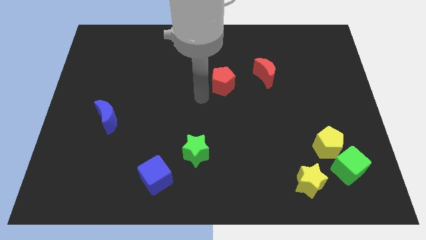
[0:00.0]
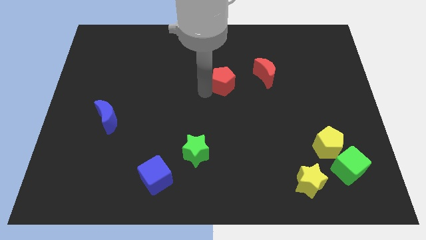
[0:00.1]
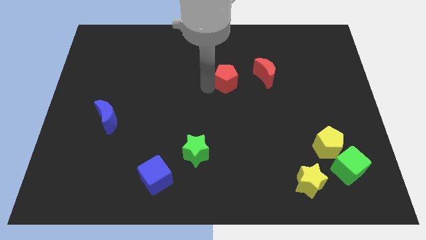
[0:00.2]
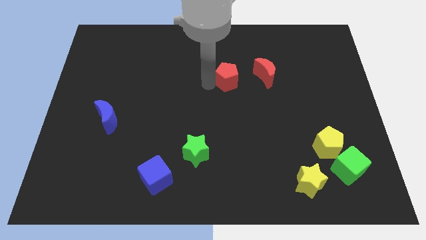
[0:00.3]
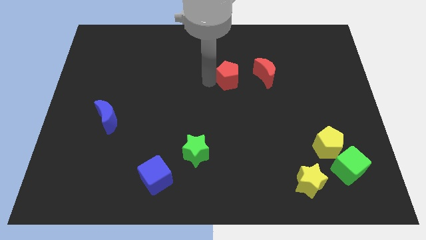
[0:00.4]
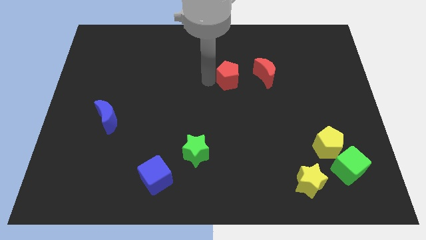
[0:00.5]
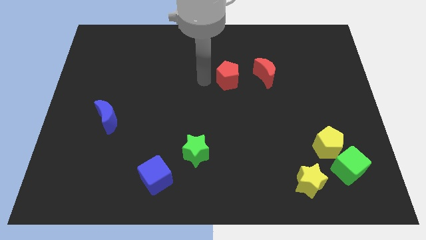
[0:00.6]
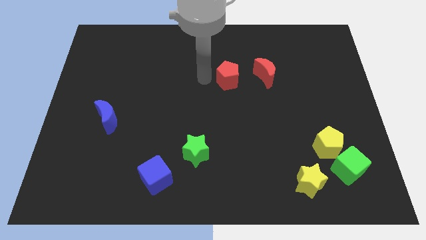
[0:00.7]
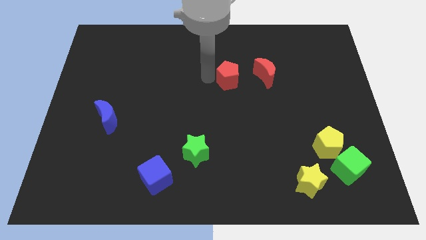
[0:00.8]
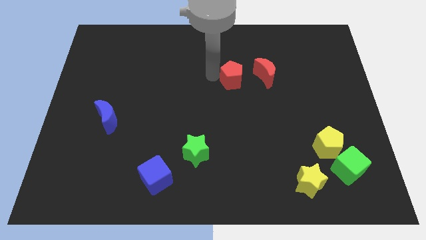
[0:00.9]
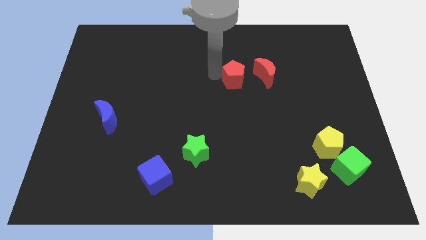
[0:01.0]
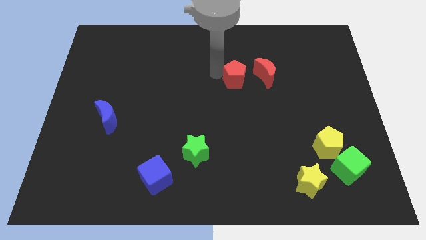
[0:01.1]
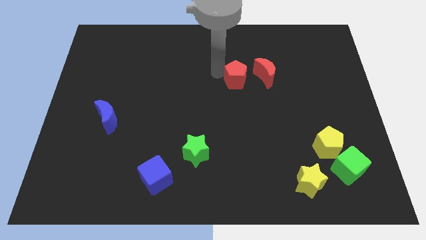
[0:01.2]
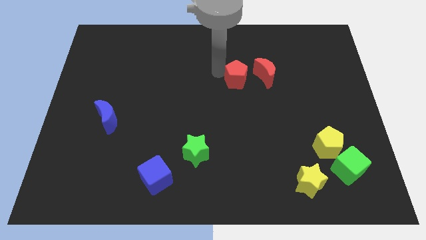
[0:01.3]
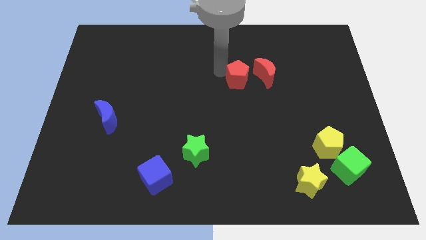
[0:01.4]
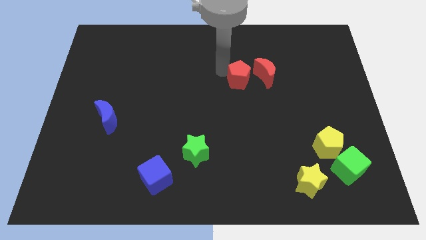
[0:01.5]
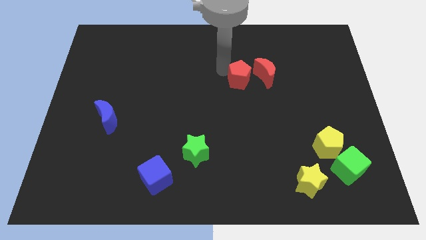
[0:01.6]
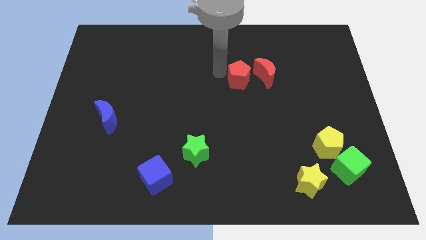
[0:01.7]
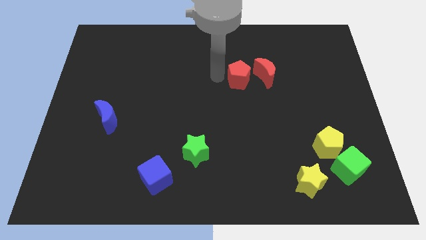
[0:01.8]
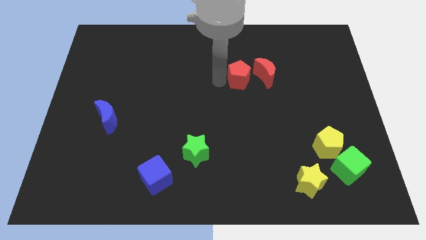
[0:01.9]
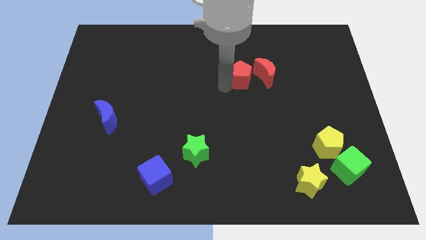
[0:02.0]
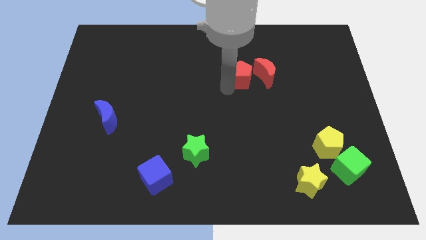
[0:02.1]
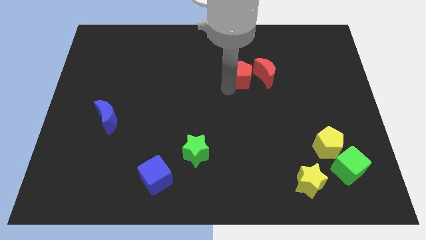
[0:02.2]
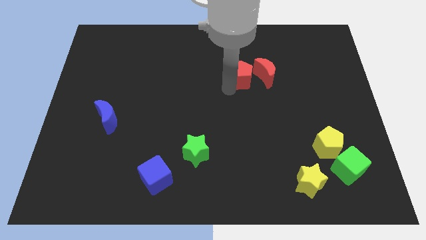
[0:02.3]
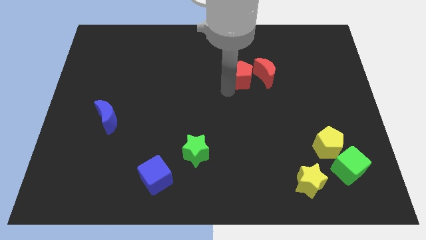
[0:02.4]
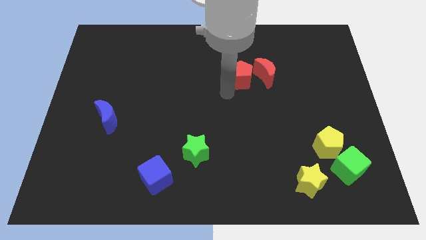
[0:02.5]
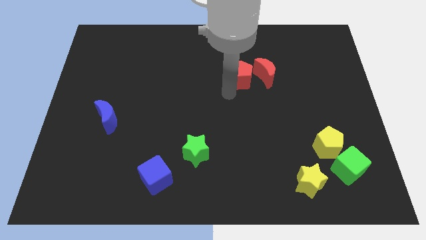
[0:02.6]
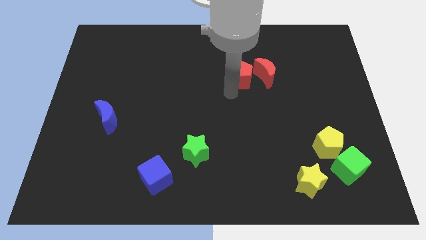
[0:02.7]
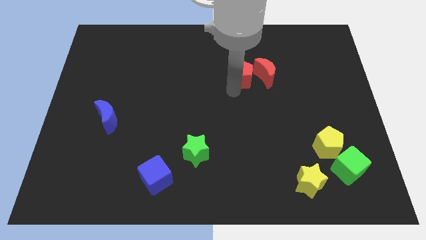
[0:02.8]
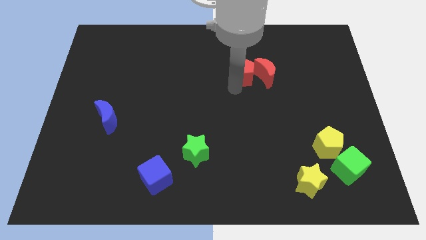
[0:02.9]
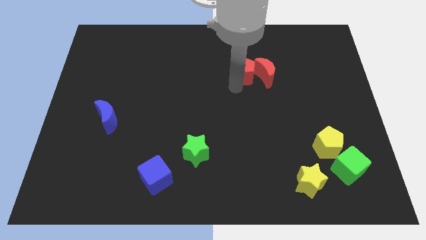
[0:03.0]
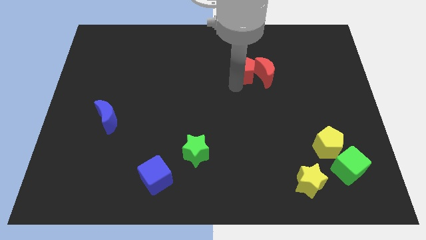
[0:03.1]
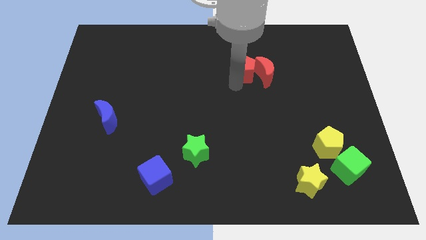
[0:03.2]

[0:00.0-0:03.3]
slide the red pentagon into the red crescent

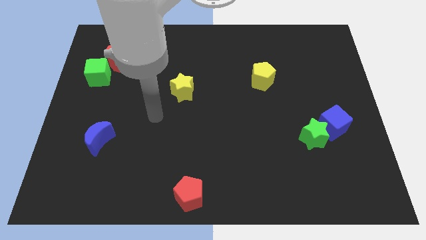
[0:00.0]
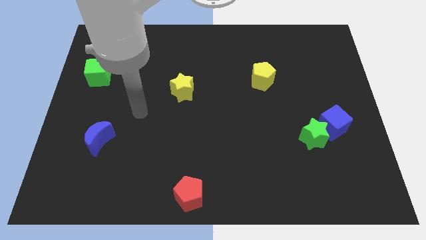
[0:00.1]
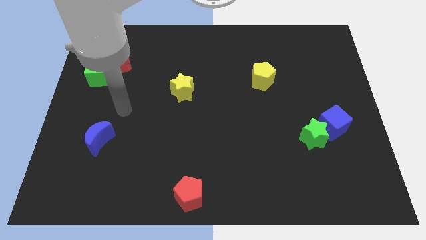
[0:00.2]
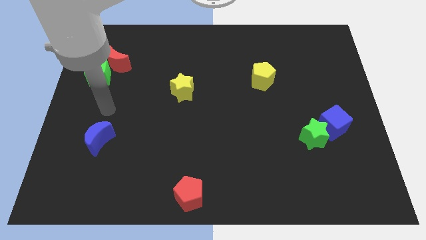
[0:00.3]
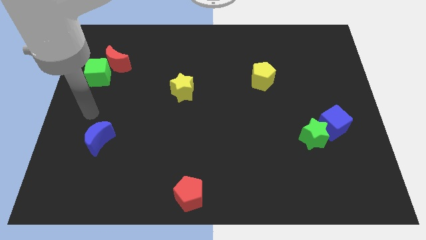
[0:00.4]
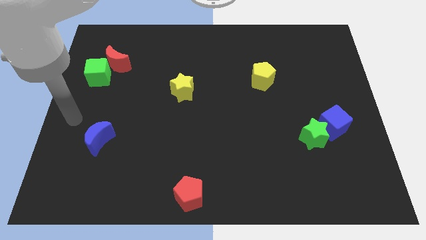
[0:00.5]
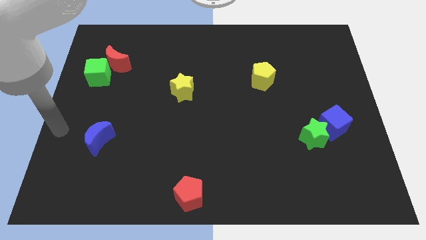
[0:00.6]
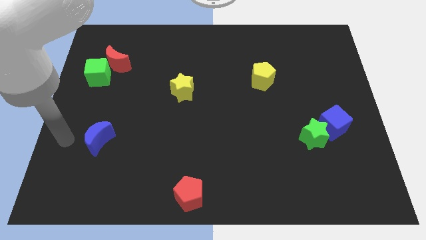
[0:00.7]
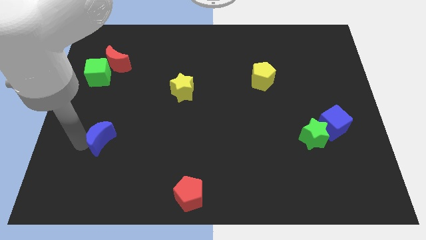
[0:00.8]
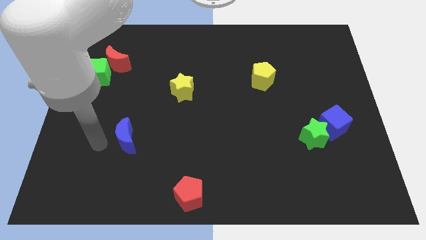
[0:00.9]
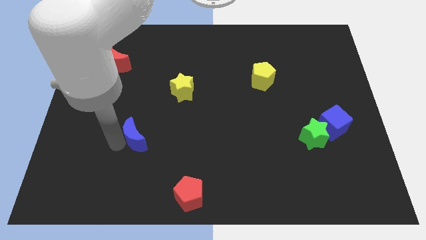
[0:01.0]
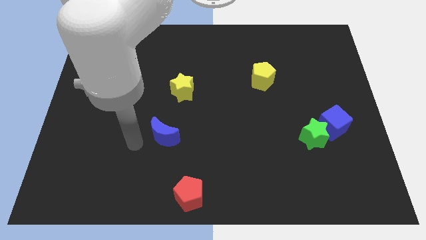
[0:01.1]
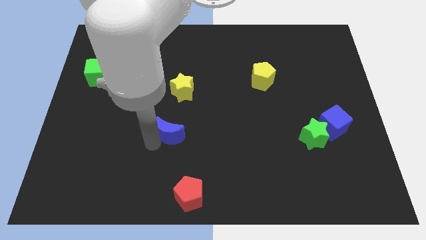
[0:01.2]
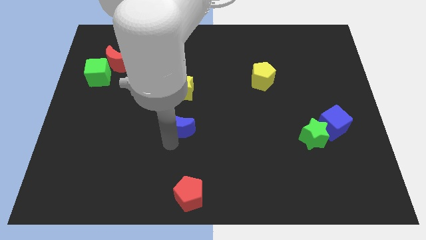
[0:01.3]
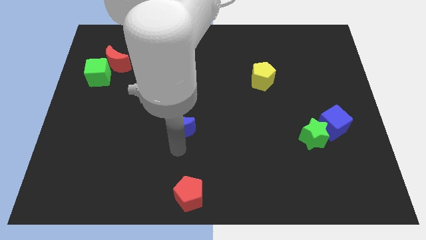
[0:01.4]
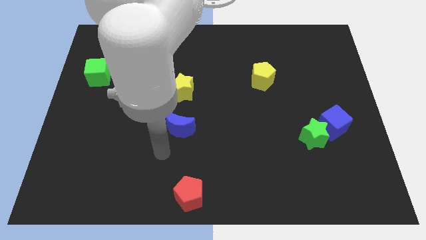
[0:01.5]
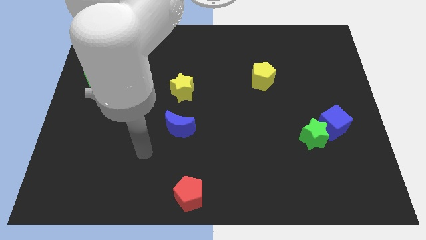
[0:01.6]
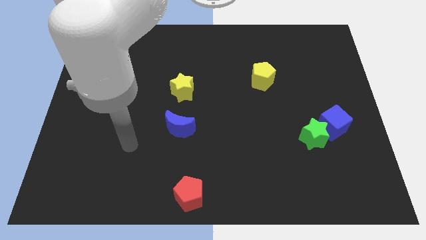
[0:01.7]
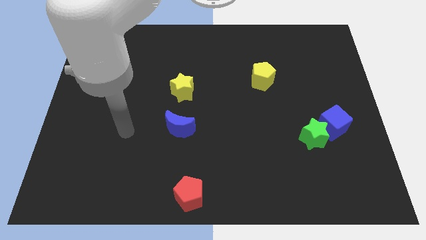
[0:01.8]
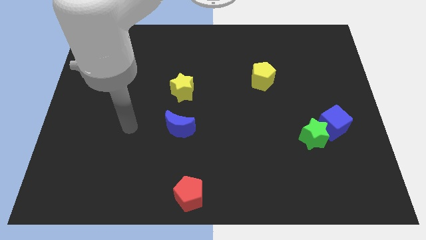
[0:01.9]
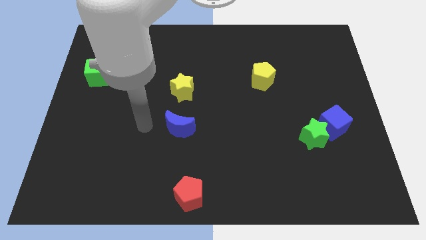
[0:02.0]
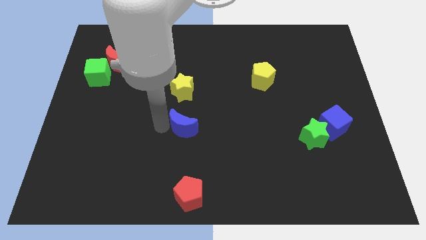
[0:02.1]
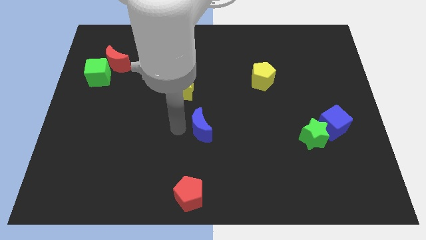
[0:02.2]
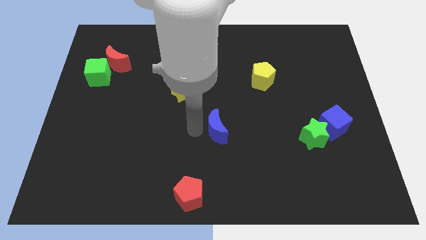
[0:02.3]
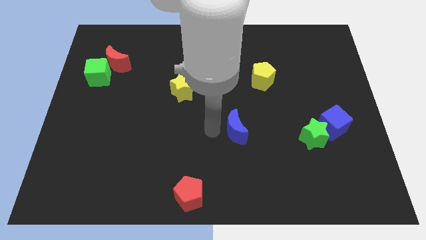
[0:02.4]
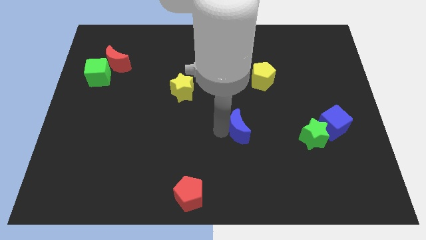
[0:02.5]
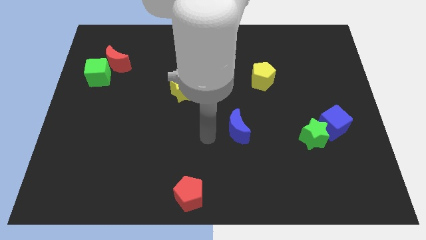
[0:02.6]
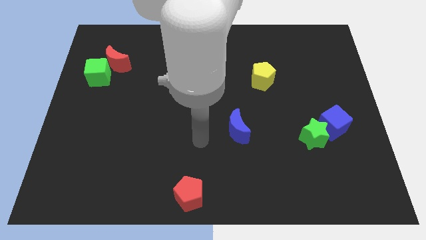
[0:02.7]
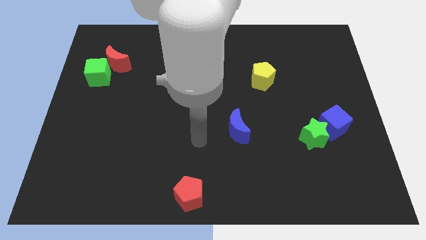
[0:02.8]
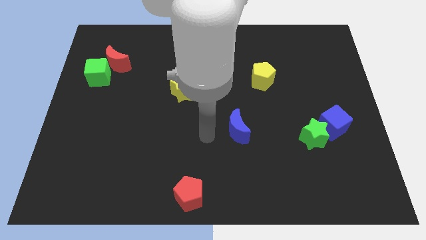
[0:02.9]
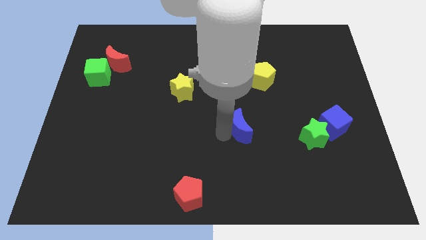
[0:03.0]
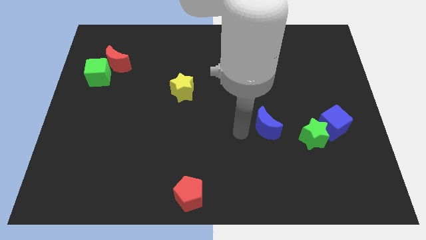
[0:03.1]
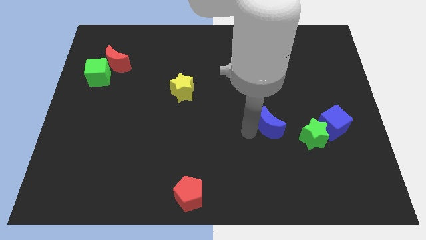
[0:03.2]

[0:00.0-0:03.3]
push the blue moon towards the group of blocks at the right side of the table

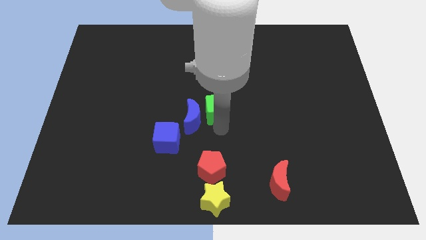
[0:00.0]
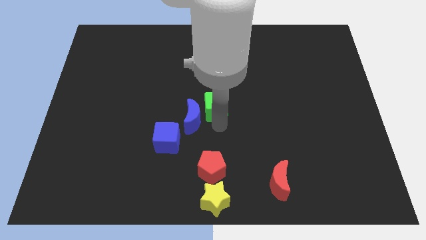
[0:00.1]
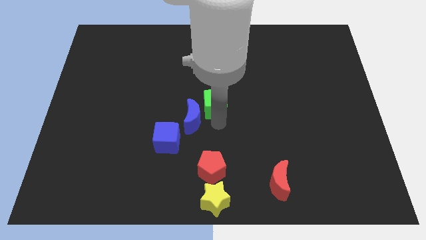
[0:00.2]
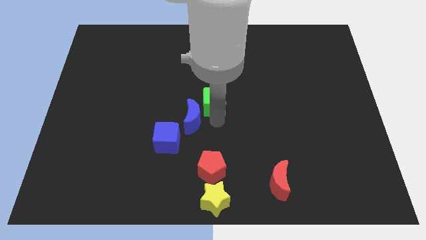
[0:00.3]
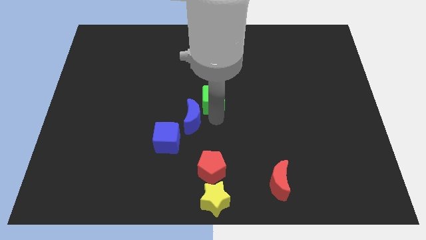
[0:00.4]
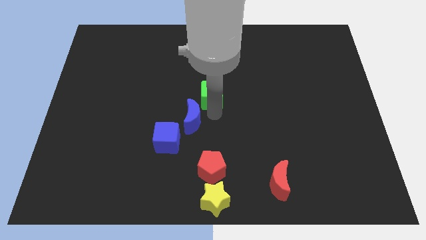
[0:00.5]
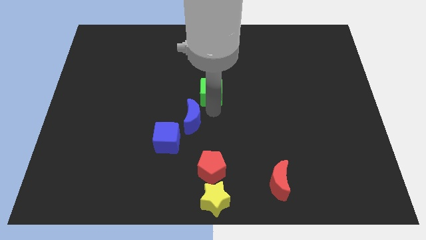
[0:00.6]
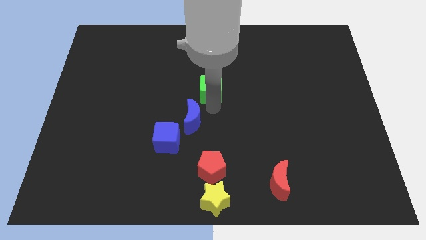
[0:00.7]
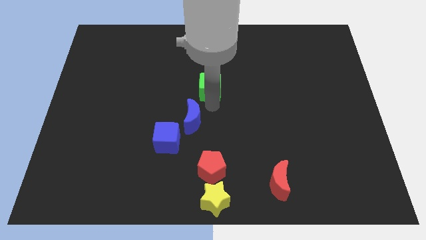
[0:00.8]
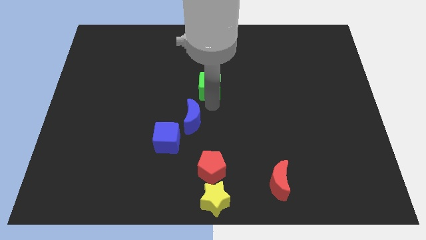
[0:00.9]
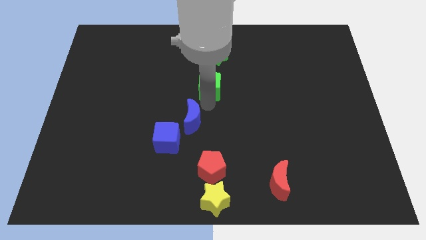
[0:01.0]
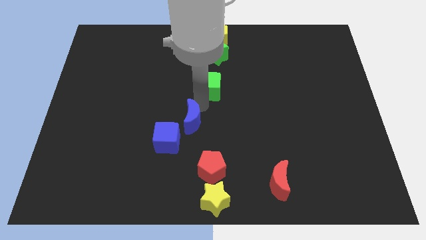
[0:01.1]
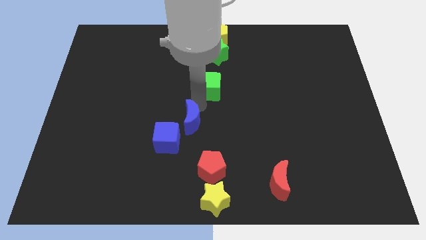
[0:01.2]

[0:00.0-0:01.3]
slightly move the green cube up

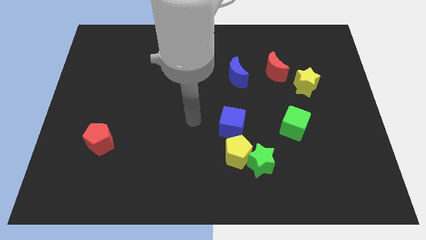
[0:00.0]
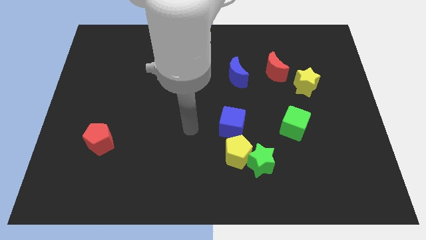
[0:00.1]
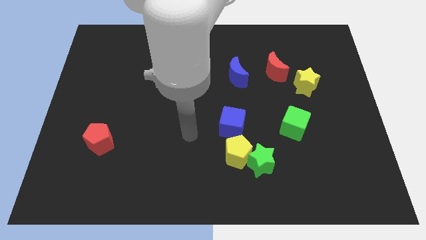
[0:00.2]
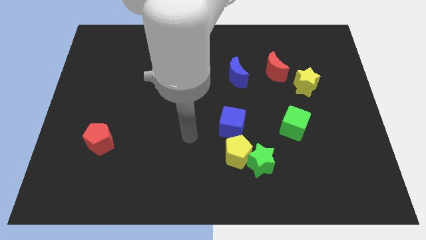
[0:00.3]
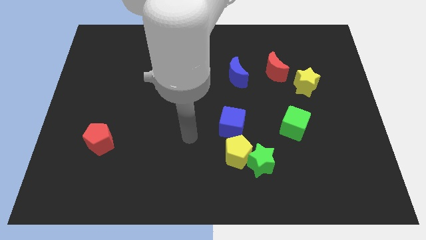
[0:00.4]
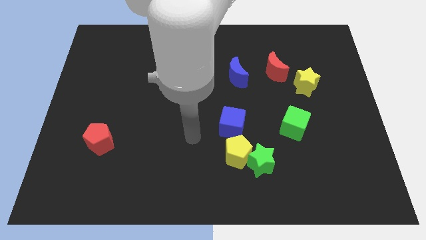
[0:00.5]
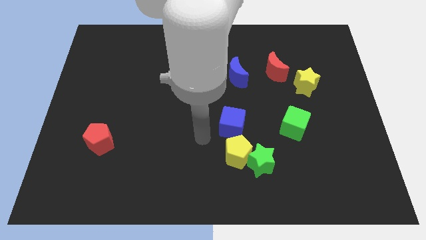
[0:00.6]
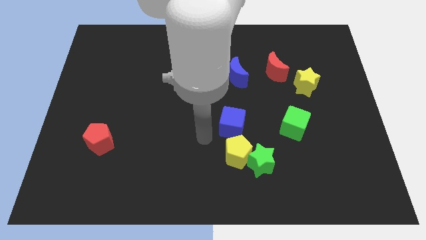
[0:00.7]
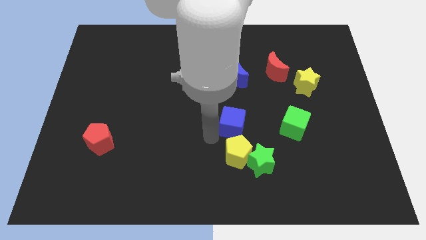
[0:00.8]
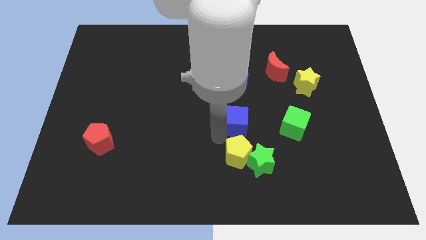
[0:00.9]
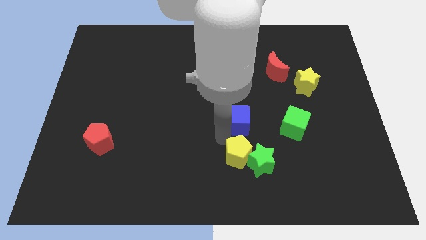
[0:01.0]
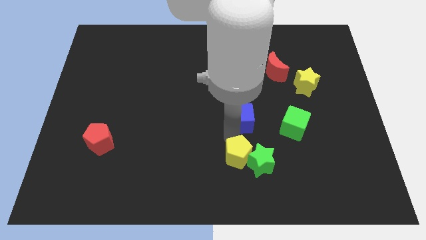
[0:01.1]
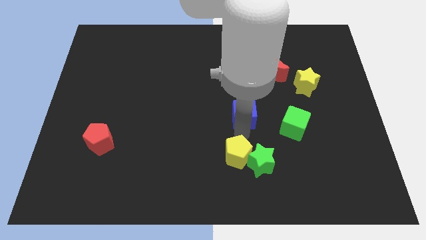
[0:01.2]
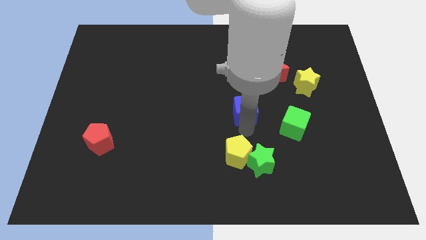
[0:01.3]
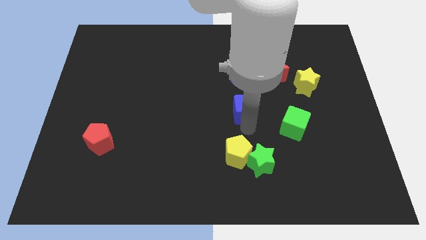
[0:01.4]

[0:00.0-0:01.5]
push the blue cube towards the green cube
